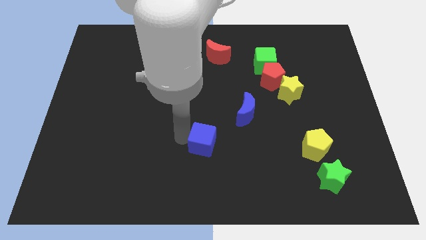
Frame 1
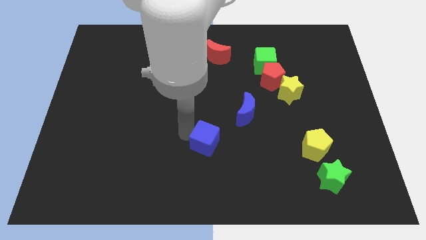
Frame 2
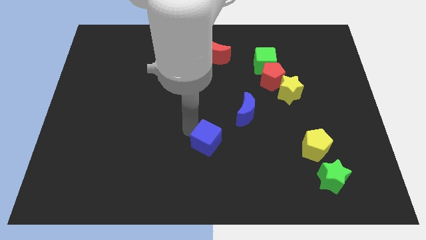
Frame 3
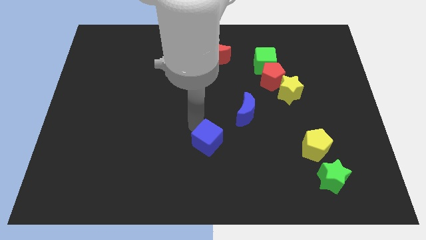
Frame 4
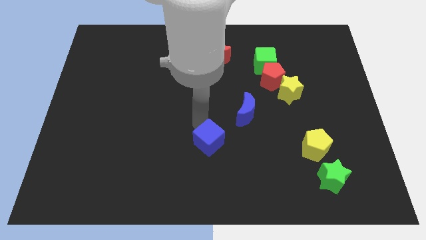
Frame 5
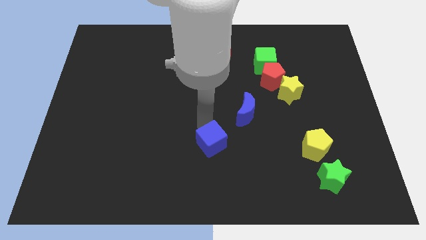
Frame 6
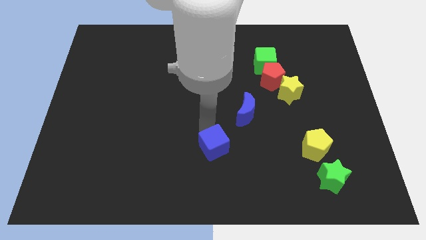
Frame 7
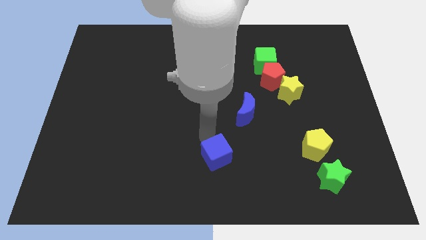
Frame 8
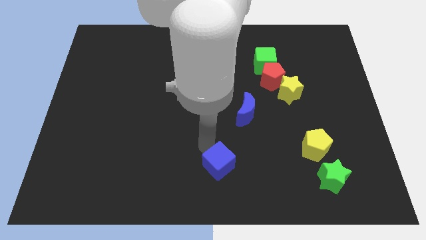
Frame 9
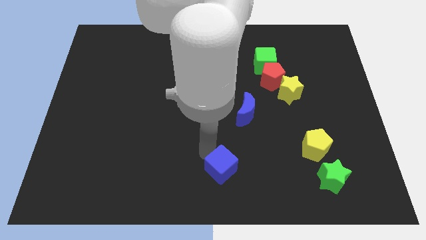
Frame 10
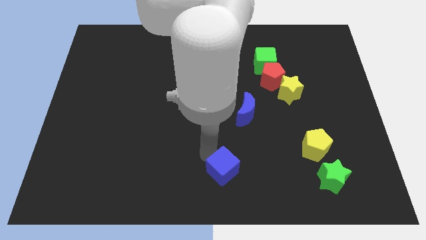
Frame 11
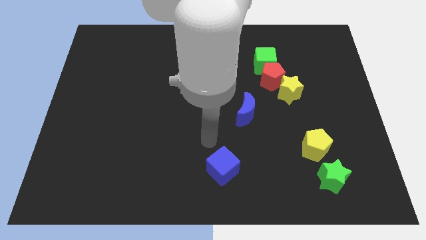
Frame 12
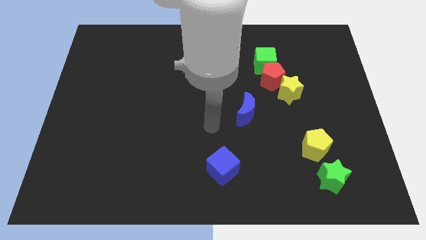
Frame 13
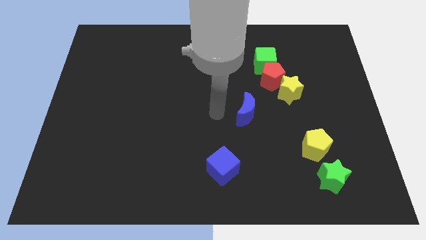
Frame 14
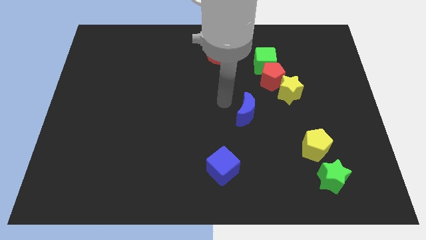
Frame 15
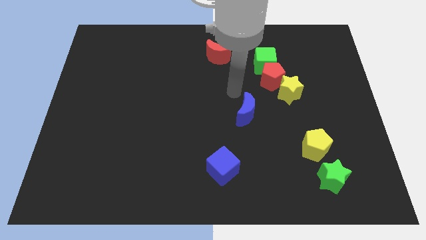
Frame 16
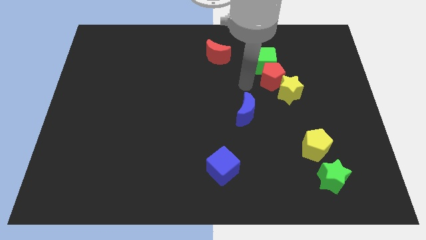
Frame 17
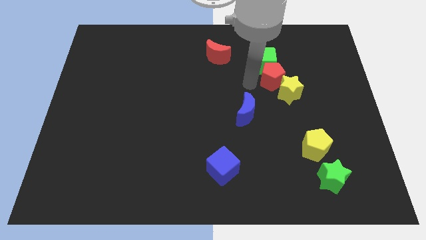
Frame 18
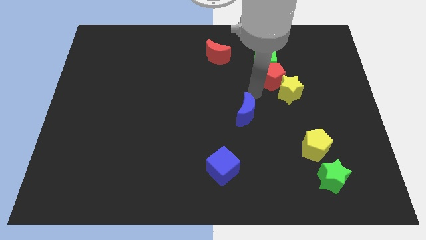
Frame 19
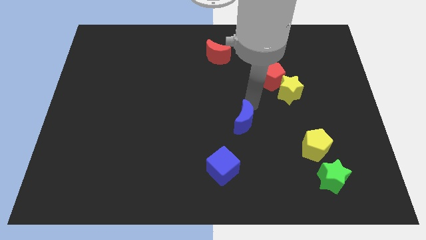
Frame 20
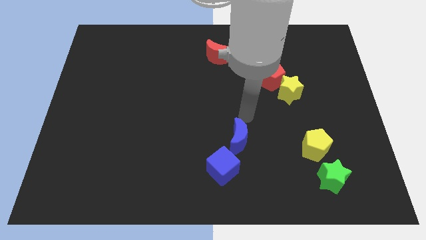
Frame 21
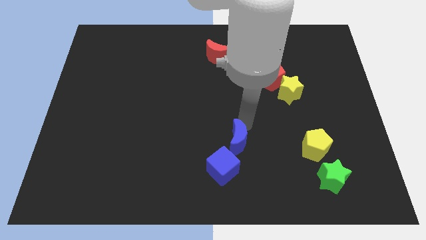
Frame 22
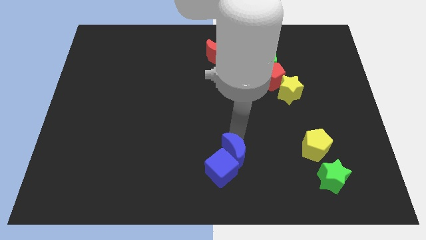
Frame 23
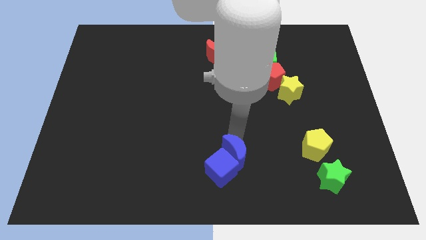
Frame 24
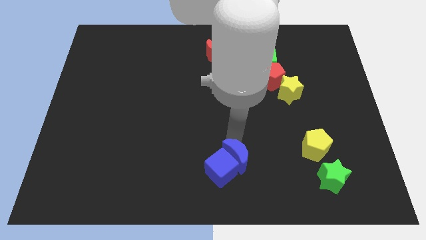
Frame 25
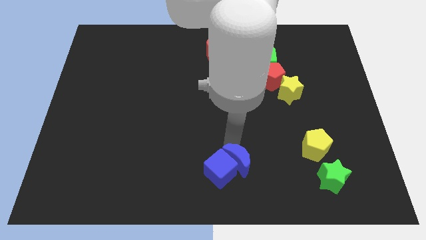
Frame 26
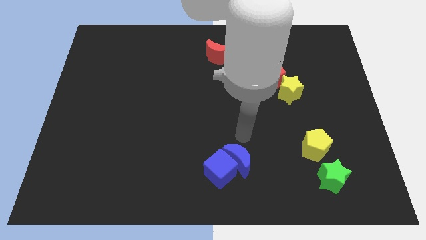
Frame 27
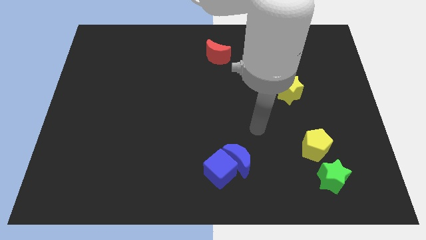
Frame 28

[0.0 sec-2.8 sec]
place the blue cube and blue moon together at the bottom of the board

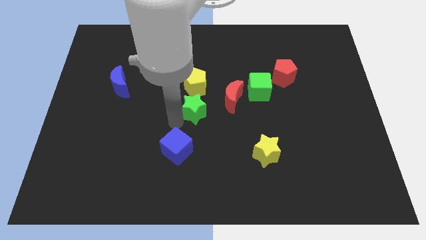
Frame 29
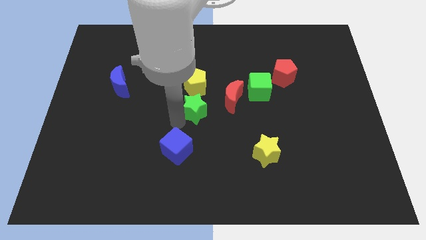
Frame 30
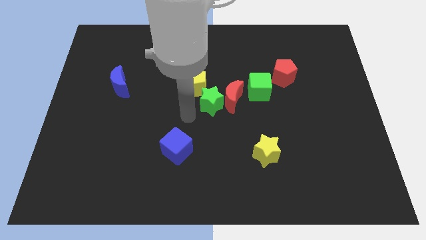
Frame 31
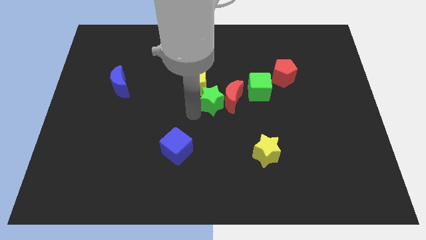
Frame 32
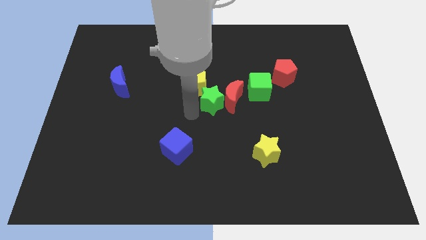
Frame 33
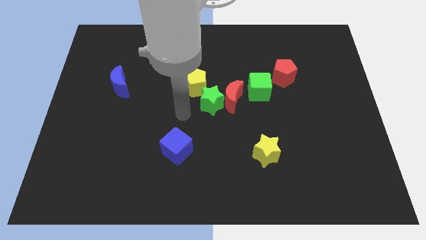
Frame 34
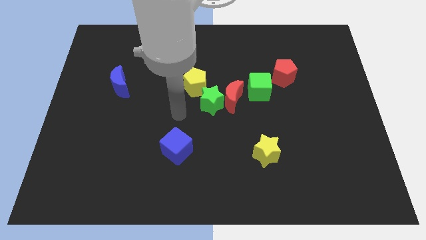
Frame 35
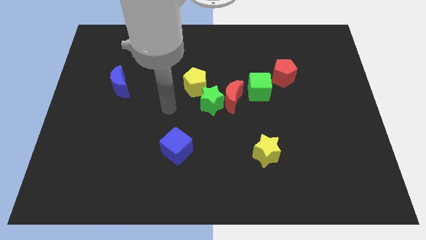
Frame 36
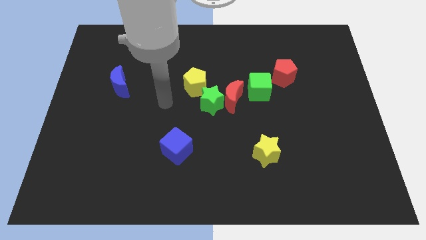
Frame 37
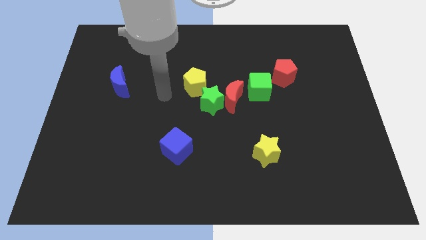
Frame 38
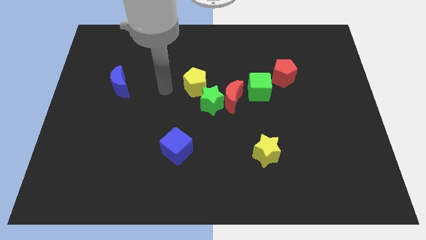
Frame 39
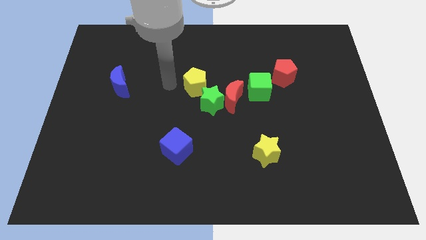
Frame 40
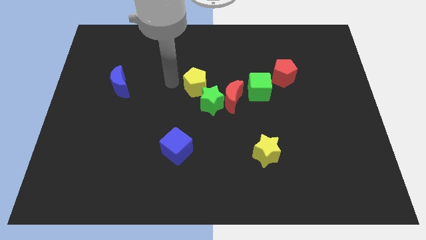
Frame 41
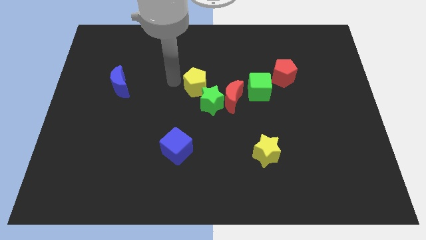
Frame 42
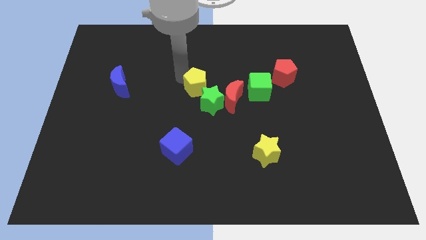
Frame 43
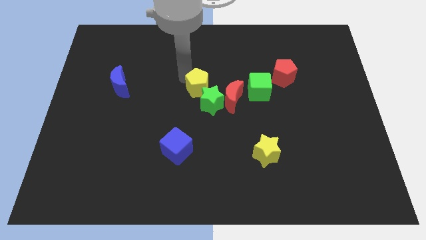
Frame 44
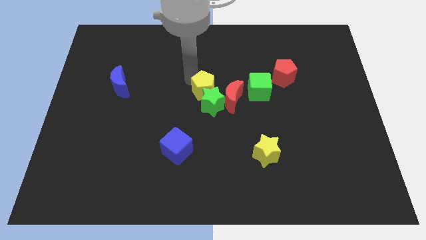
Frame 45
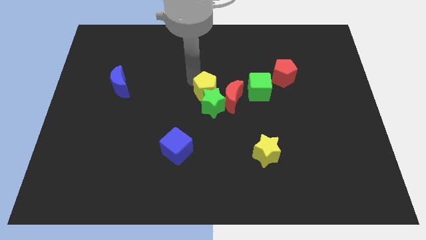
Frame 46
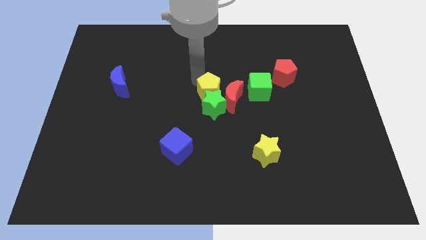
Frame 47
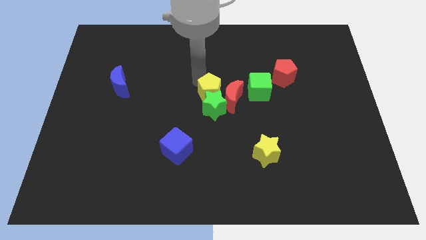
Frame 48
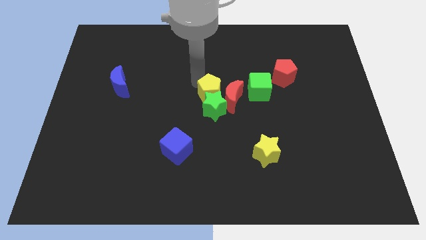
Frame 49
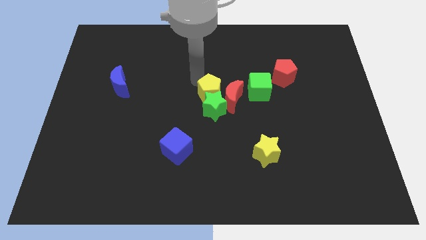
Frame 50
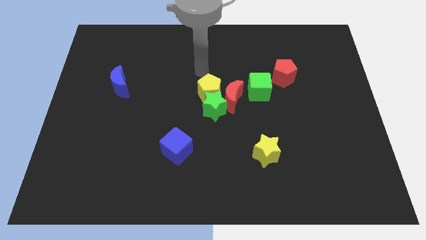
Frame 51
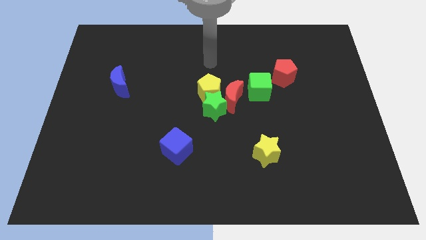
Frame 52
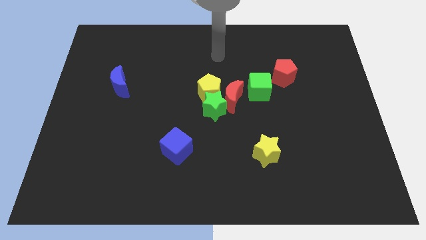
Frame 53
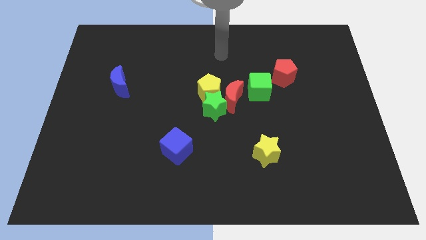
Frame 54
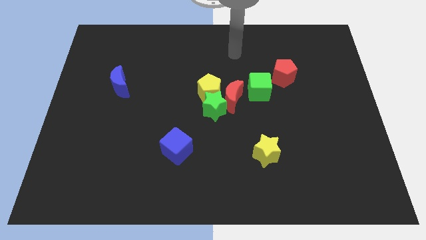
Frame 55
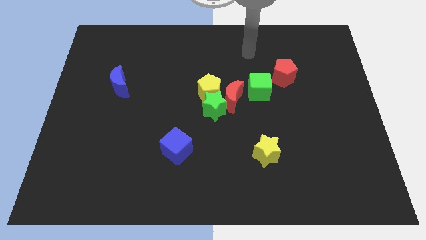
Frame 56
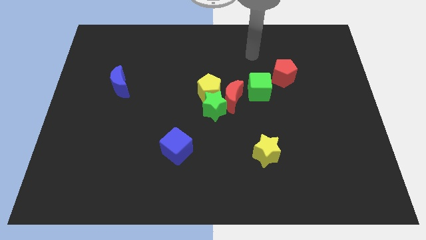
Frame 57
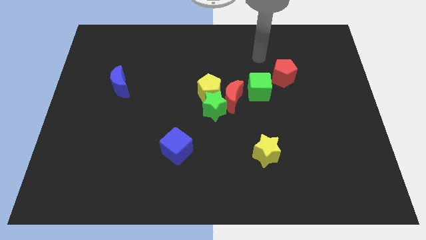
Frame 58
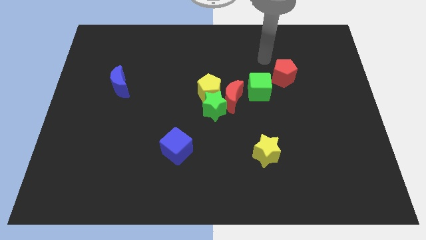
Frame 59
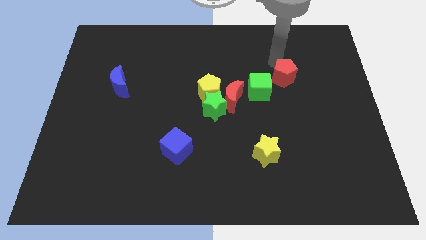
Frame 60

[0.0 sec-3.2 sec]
slide the green star and the yellow pentagon to the center of the board

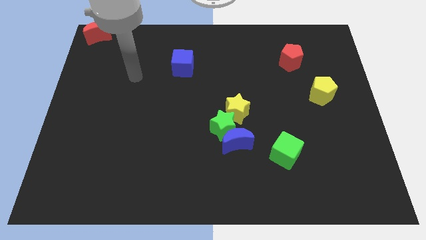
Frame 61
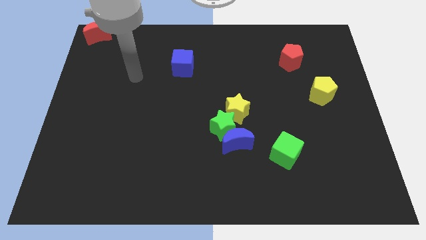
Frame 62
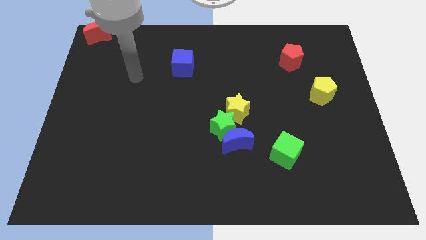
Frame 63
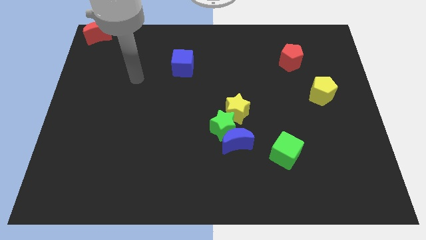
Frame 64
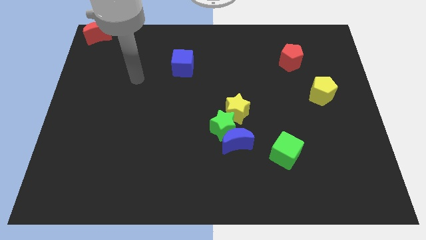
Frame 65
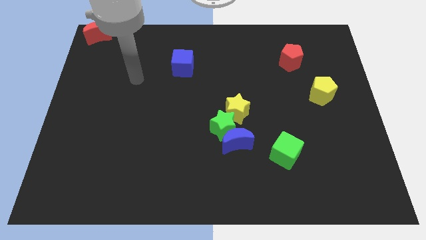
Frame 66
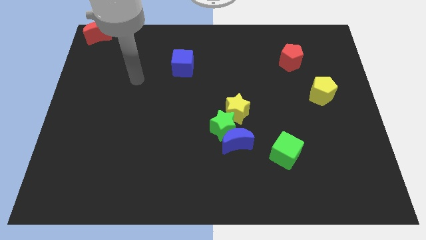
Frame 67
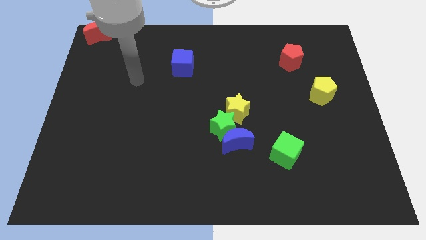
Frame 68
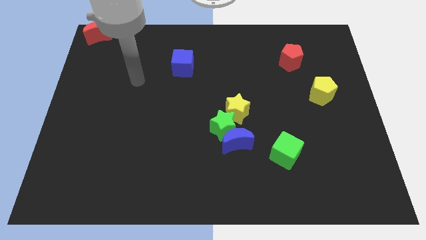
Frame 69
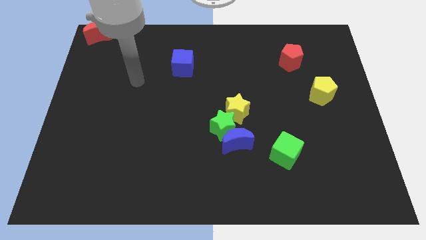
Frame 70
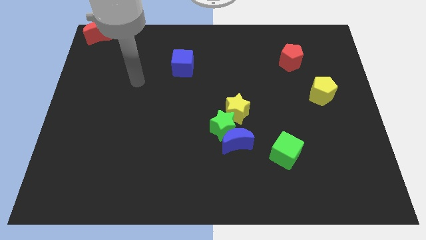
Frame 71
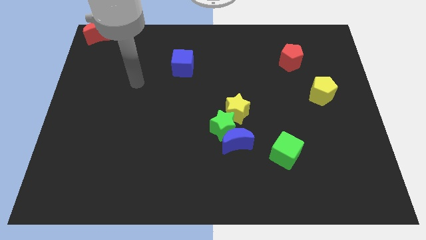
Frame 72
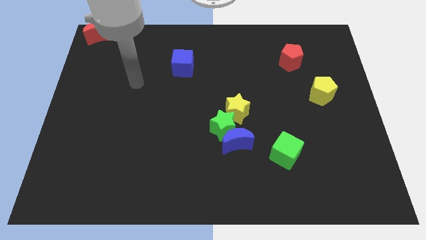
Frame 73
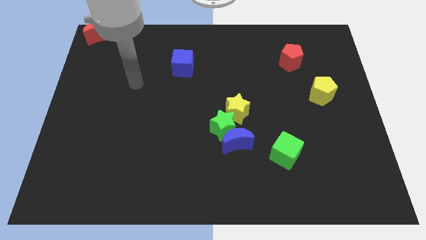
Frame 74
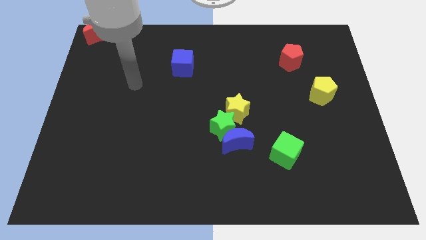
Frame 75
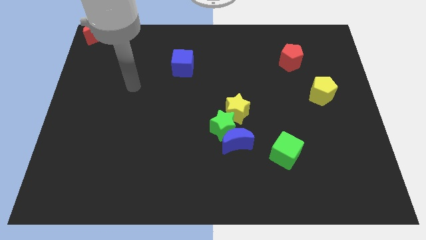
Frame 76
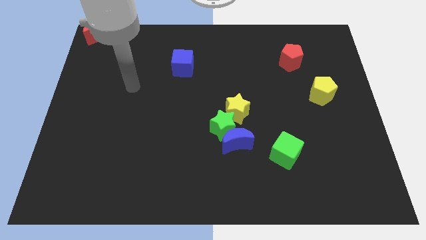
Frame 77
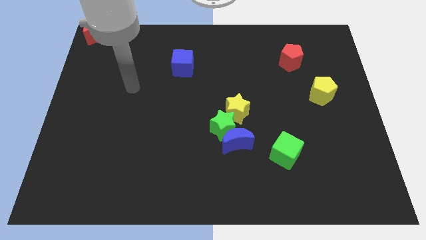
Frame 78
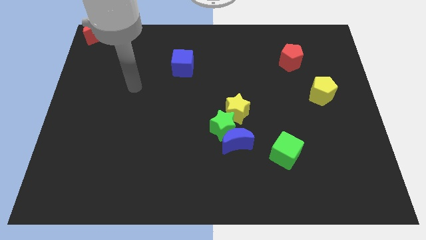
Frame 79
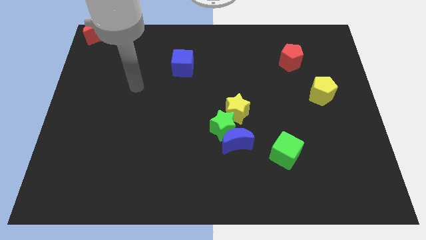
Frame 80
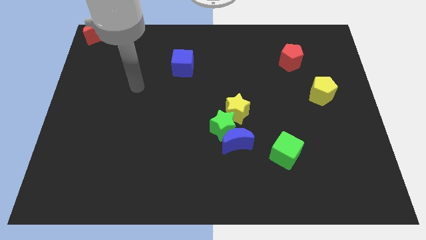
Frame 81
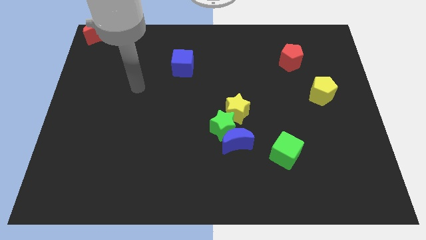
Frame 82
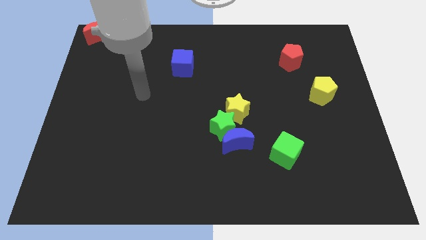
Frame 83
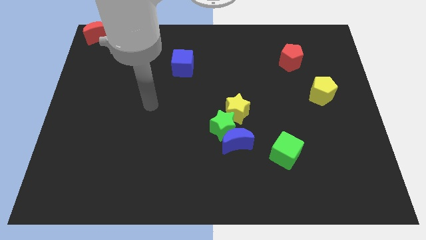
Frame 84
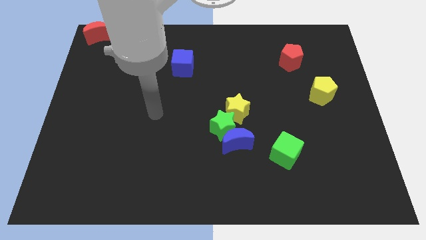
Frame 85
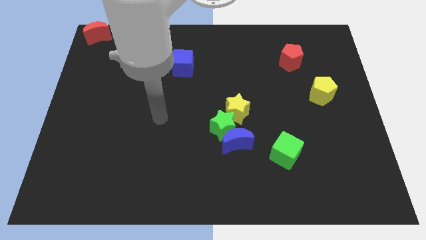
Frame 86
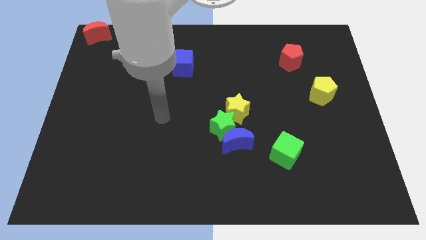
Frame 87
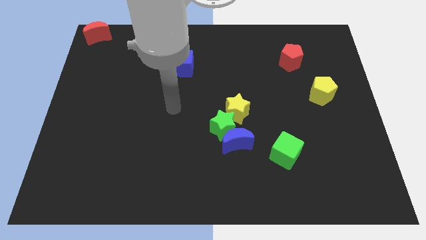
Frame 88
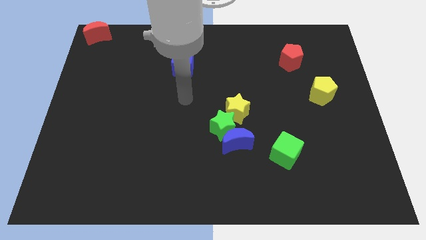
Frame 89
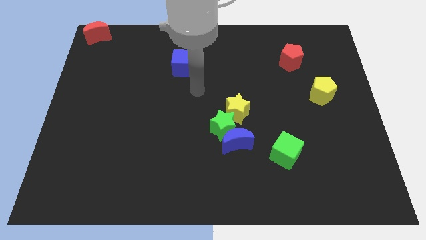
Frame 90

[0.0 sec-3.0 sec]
move your arm and point below the blue cube

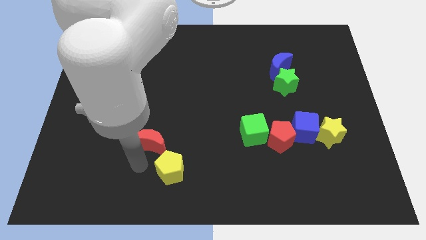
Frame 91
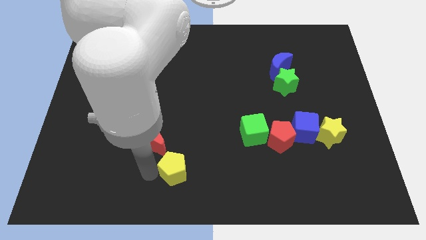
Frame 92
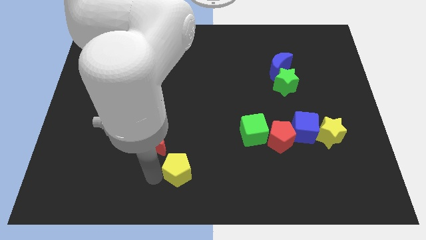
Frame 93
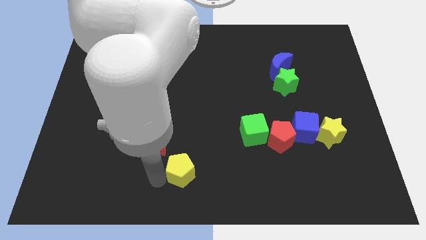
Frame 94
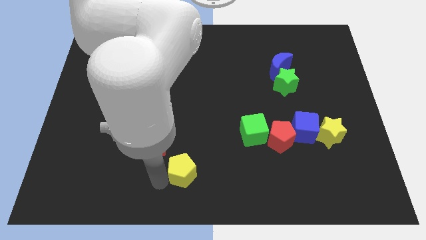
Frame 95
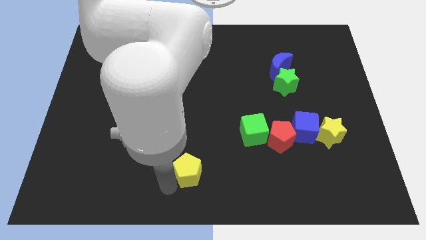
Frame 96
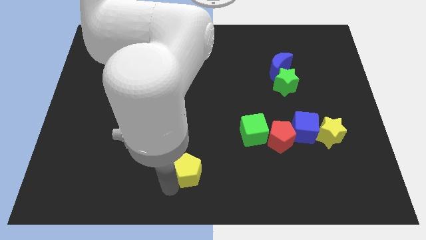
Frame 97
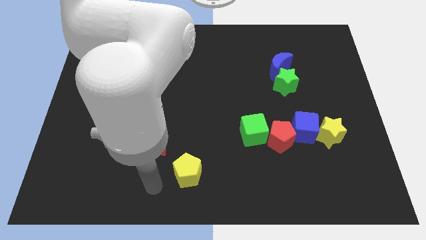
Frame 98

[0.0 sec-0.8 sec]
slightly push down the yellow pentagon
